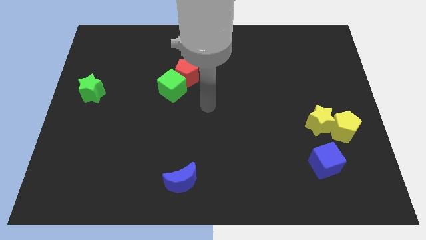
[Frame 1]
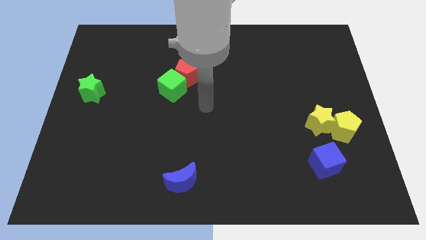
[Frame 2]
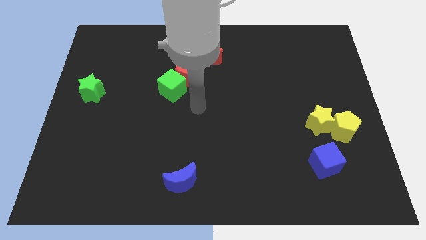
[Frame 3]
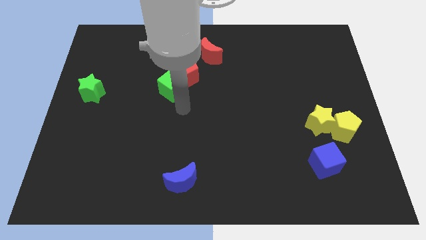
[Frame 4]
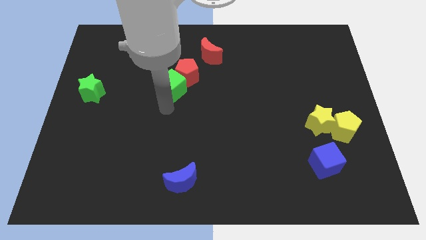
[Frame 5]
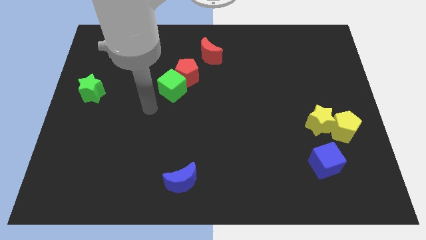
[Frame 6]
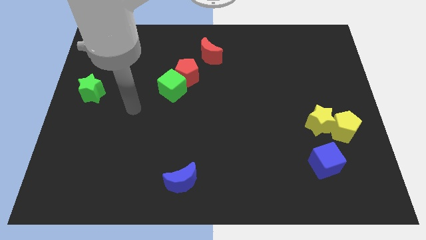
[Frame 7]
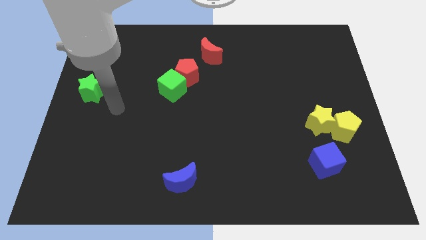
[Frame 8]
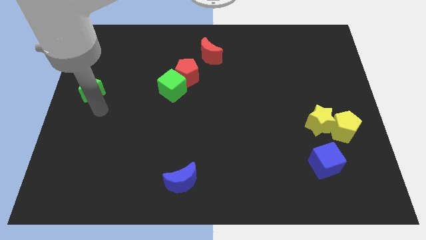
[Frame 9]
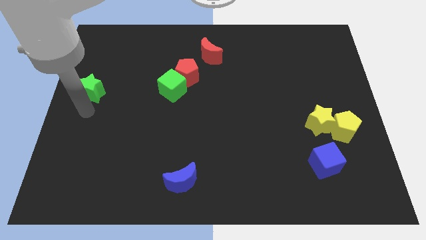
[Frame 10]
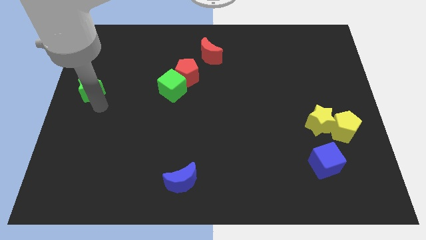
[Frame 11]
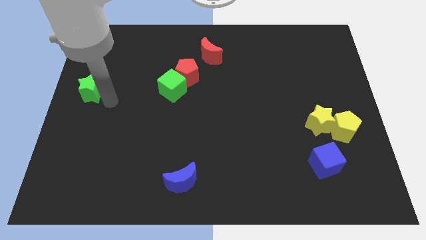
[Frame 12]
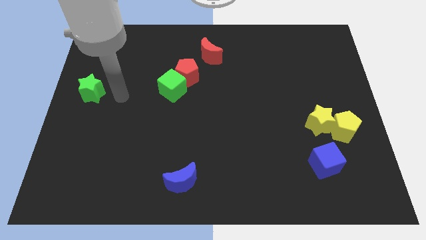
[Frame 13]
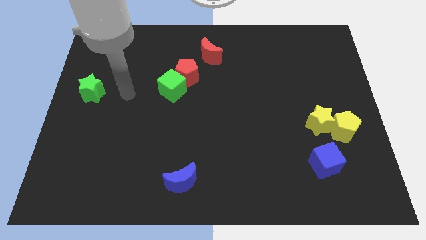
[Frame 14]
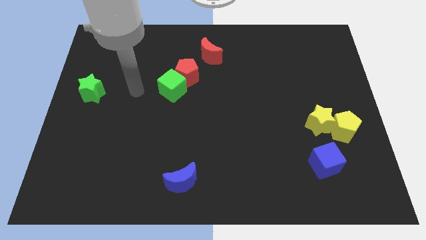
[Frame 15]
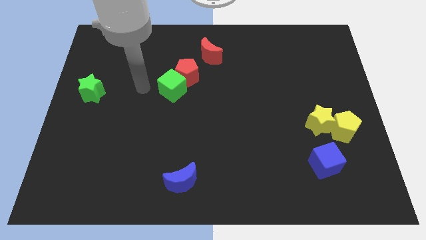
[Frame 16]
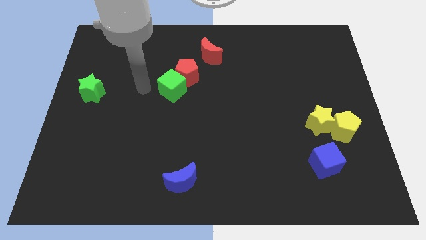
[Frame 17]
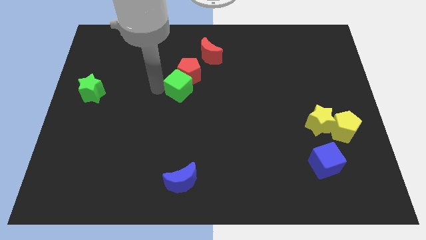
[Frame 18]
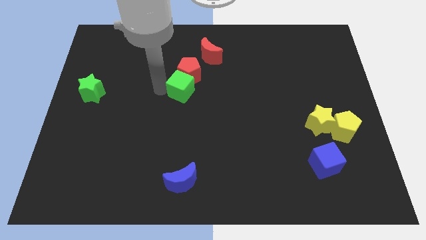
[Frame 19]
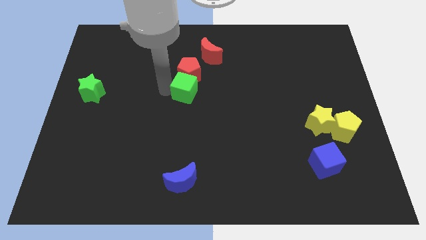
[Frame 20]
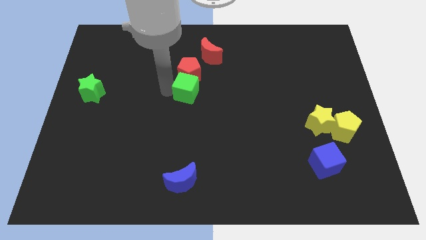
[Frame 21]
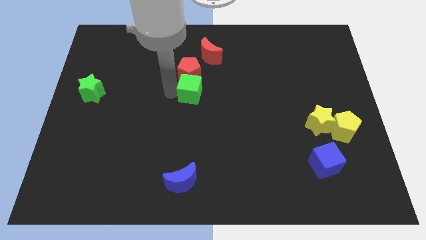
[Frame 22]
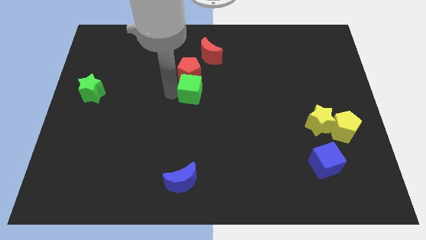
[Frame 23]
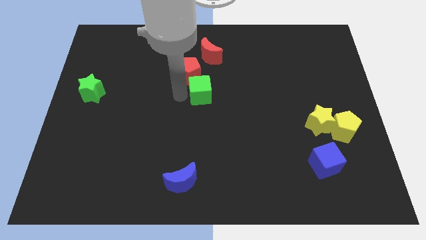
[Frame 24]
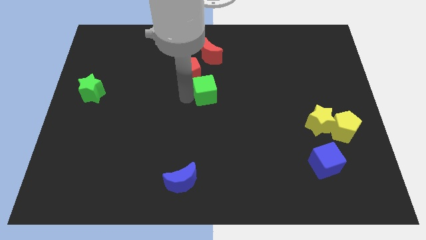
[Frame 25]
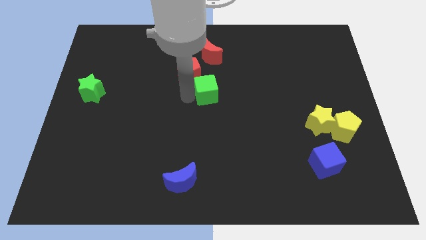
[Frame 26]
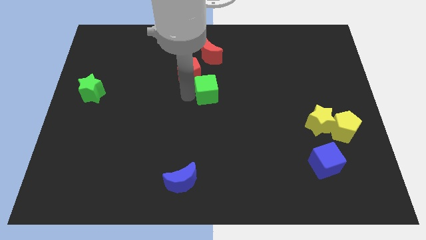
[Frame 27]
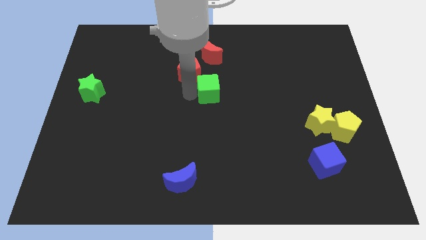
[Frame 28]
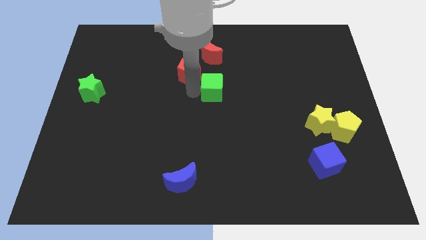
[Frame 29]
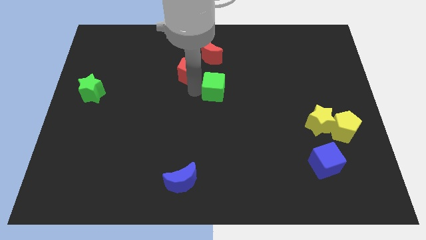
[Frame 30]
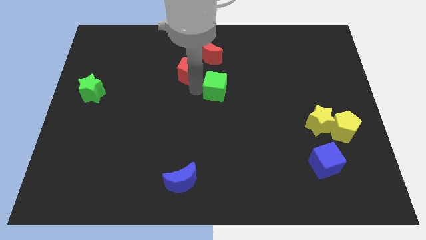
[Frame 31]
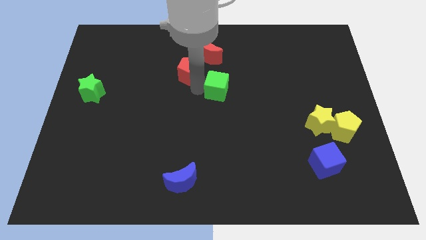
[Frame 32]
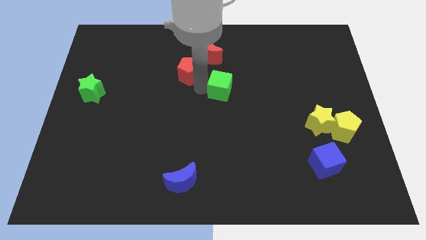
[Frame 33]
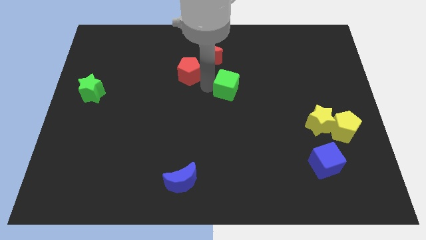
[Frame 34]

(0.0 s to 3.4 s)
push the green cube to the bottom of the red crescent

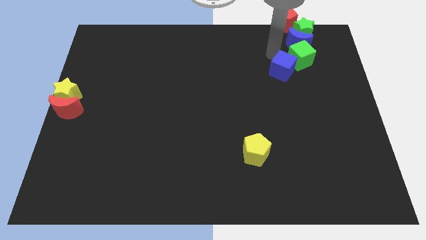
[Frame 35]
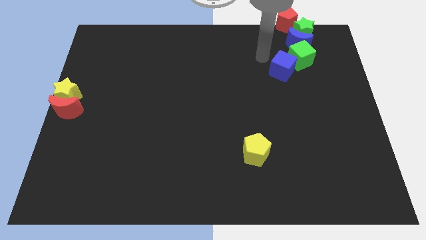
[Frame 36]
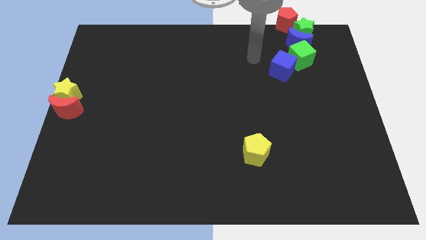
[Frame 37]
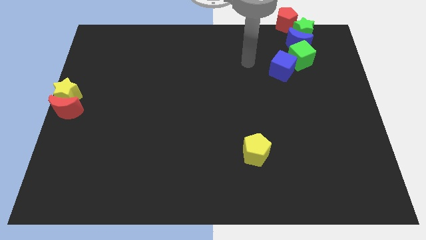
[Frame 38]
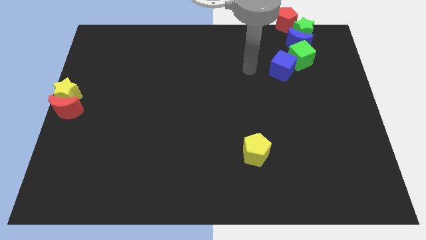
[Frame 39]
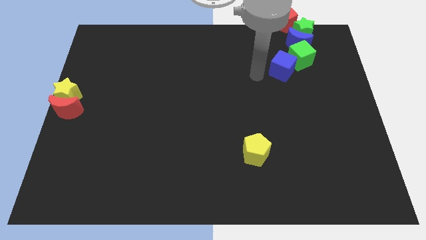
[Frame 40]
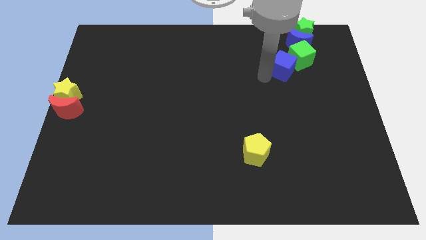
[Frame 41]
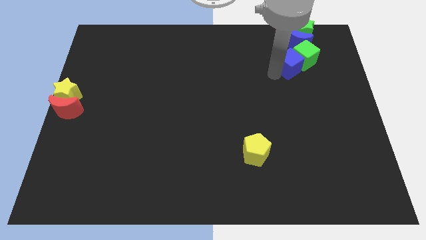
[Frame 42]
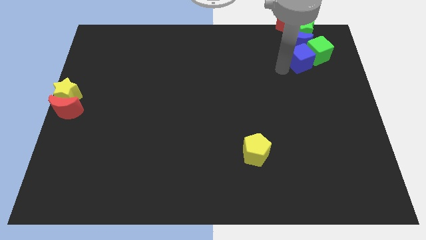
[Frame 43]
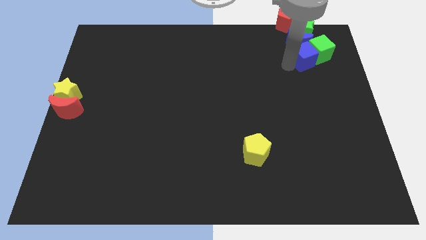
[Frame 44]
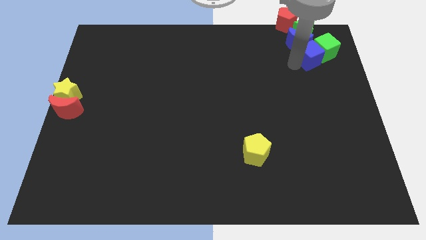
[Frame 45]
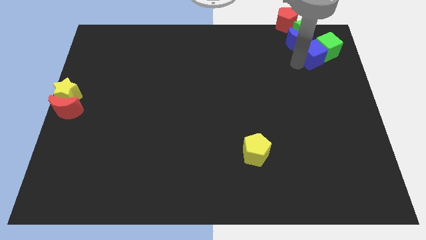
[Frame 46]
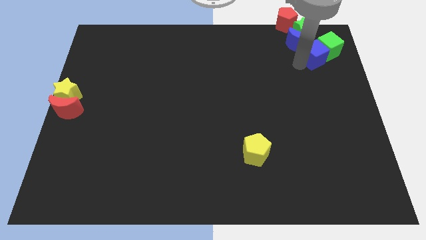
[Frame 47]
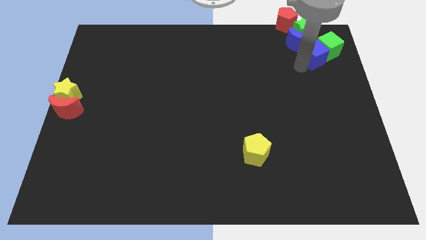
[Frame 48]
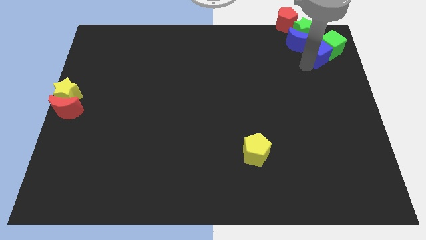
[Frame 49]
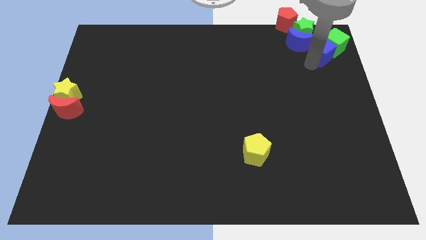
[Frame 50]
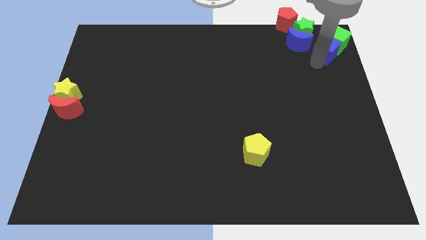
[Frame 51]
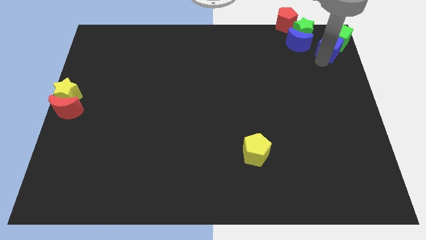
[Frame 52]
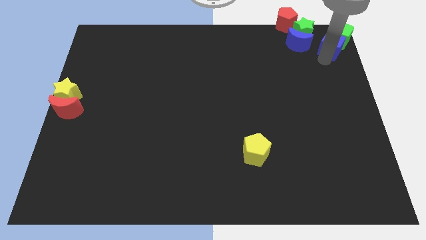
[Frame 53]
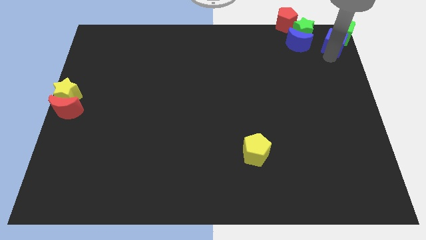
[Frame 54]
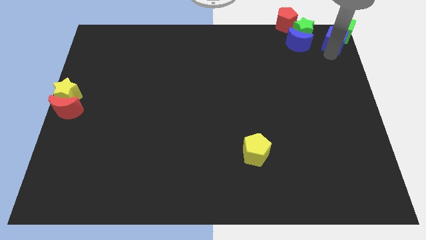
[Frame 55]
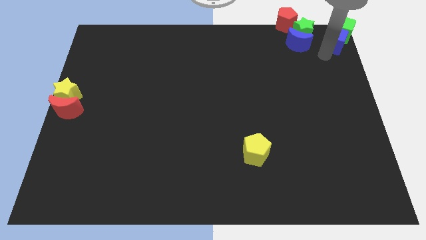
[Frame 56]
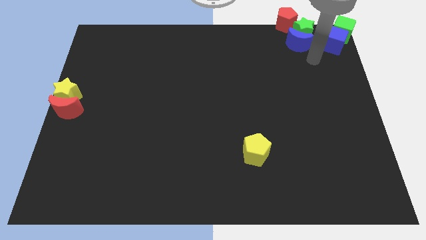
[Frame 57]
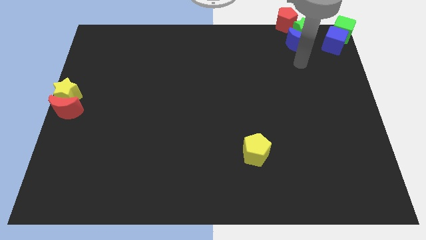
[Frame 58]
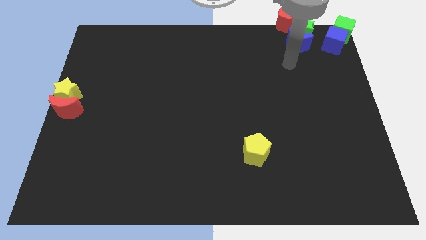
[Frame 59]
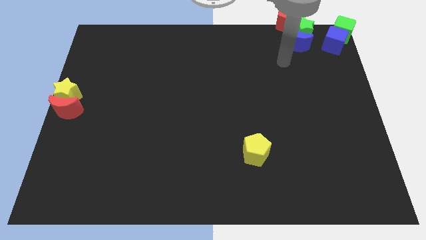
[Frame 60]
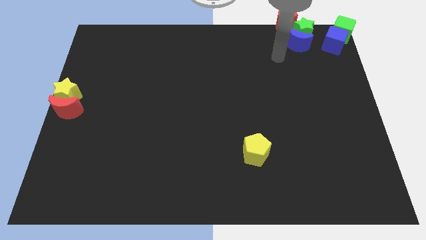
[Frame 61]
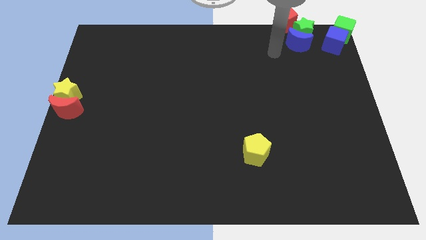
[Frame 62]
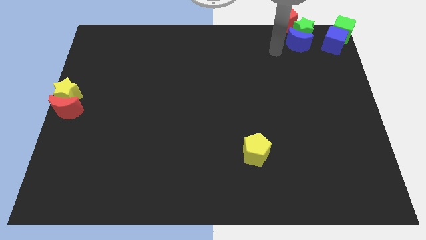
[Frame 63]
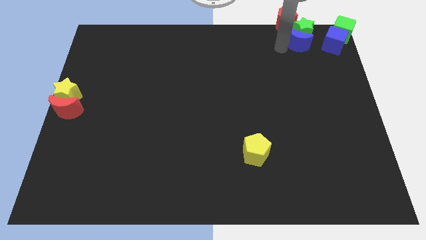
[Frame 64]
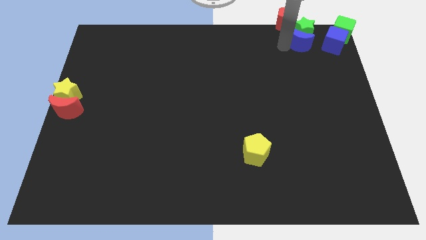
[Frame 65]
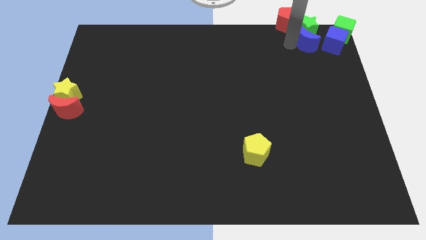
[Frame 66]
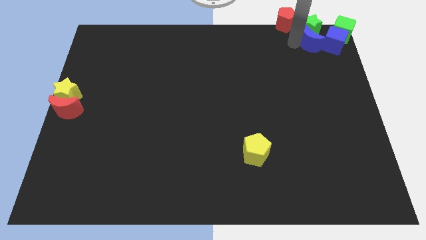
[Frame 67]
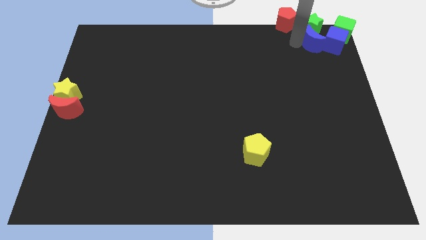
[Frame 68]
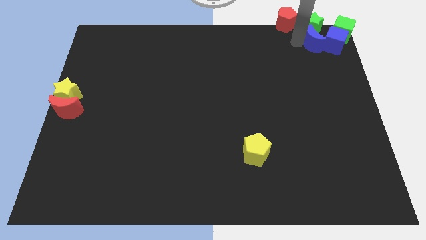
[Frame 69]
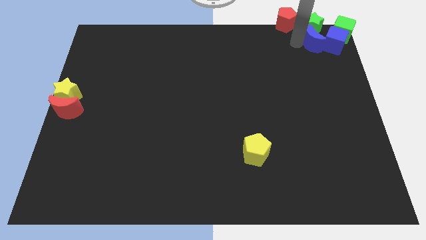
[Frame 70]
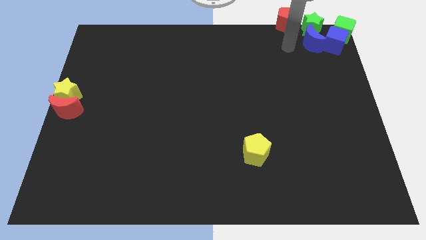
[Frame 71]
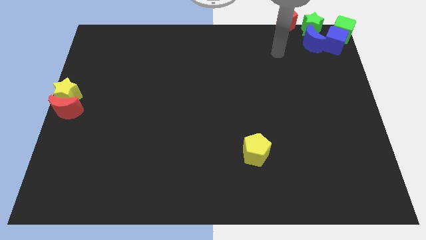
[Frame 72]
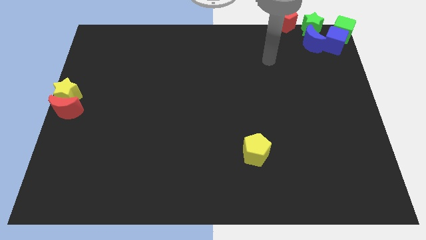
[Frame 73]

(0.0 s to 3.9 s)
place the blue cube and green cube towards the top right corner of the board

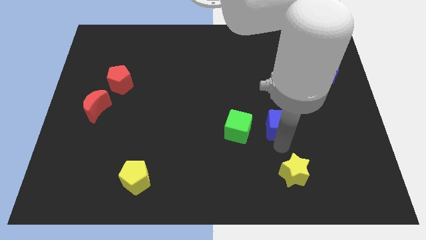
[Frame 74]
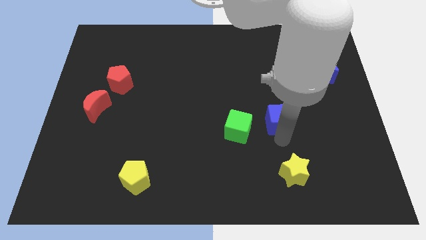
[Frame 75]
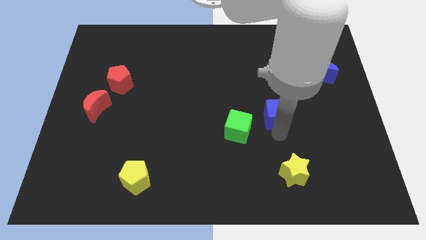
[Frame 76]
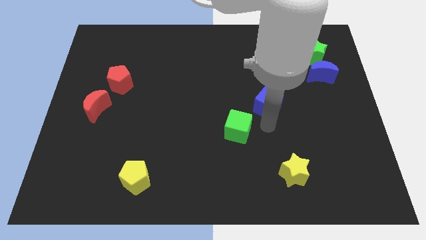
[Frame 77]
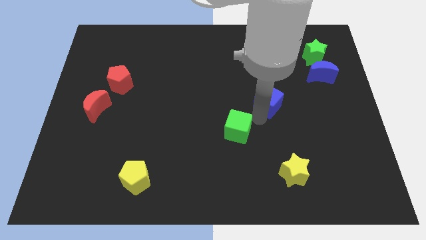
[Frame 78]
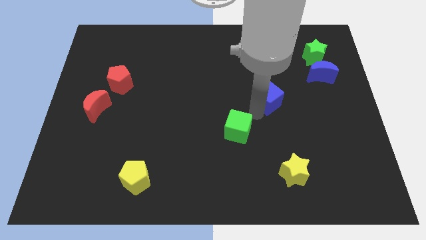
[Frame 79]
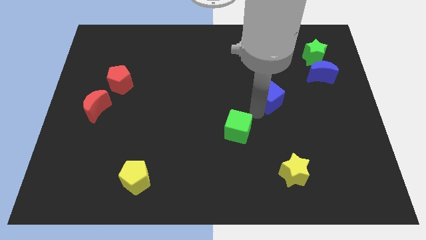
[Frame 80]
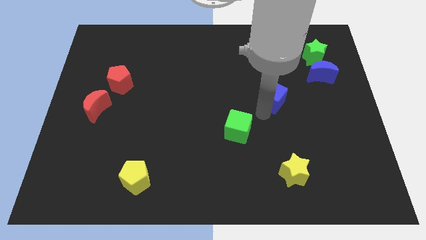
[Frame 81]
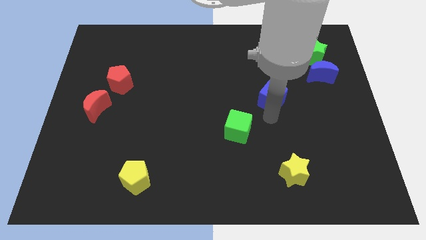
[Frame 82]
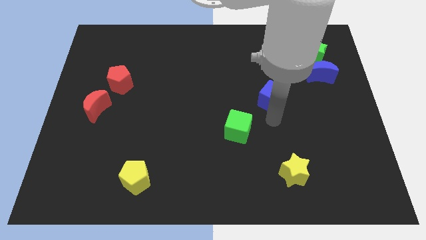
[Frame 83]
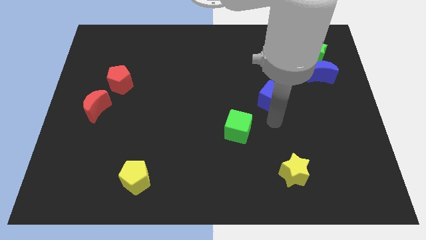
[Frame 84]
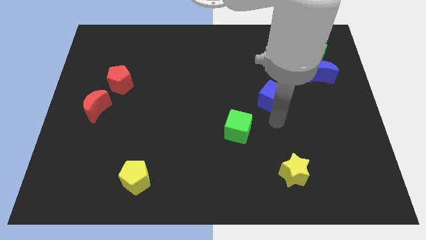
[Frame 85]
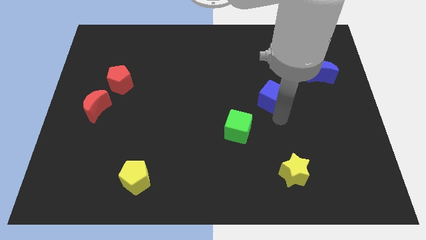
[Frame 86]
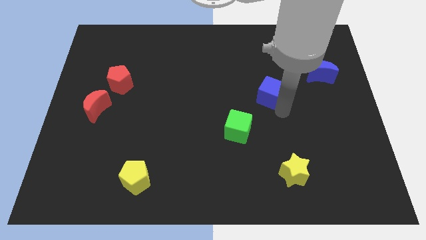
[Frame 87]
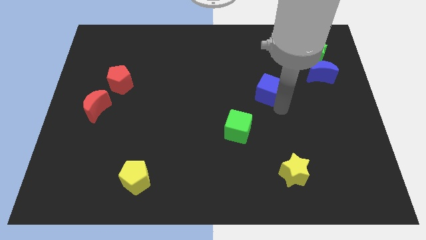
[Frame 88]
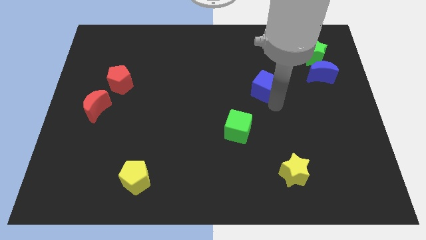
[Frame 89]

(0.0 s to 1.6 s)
move blue cube slightly to the top side of the board
